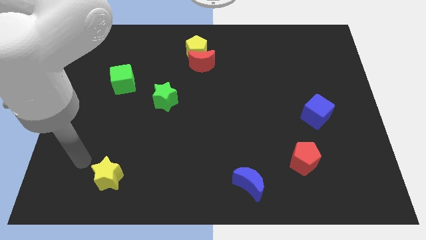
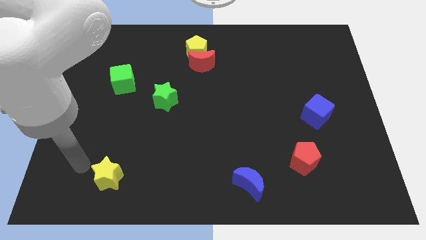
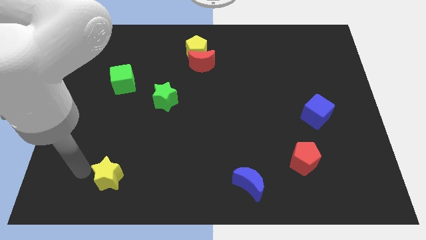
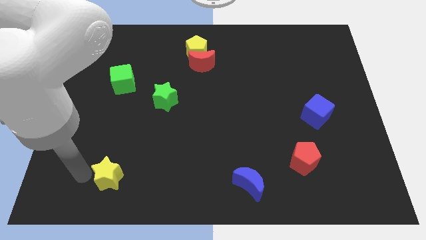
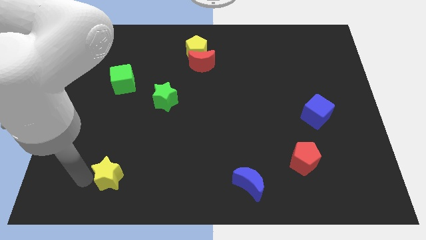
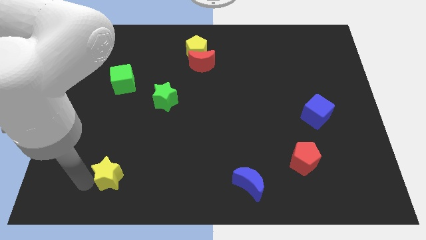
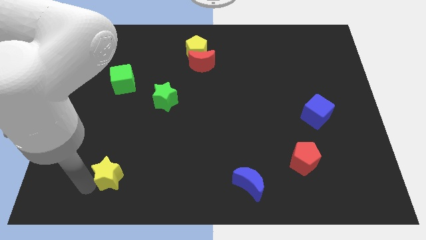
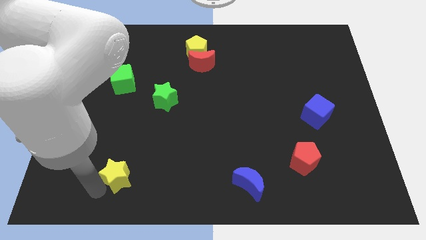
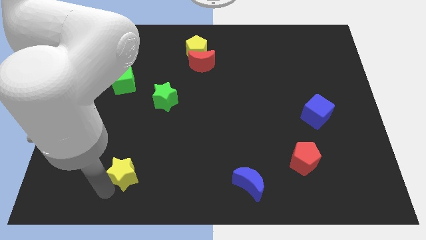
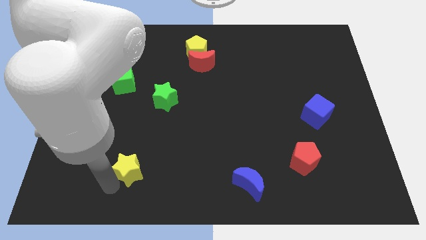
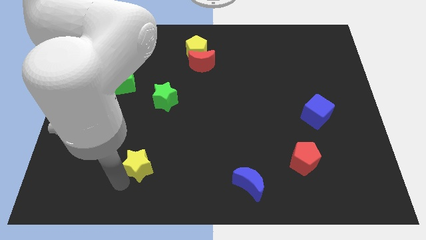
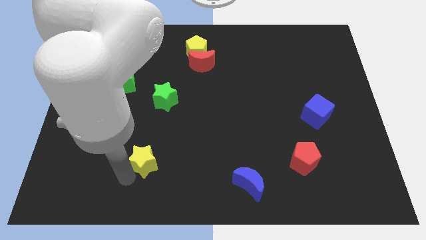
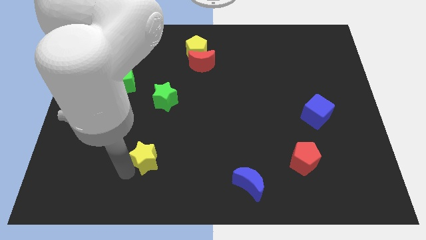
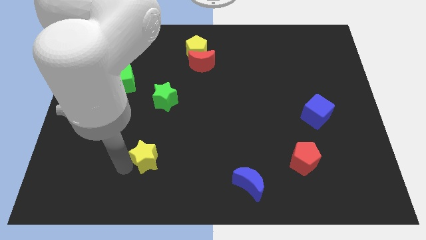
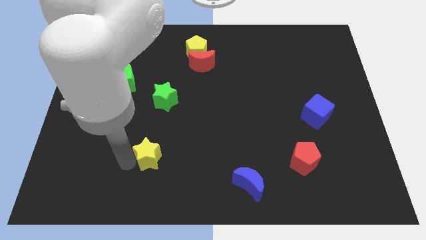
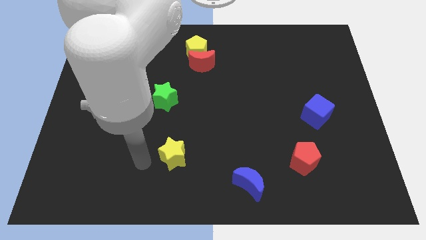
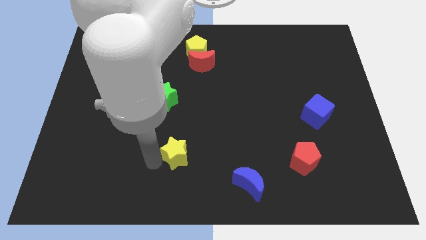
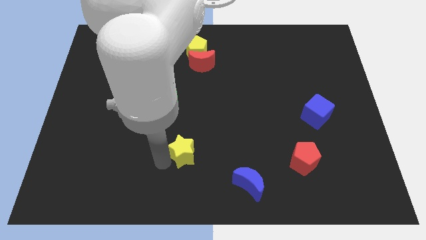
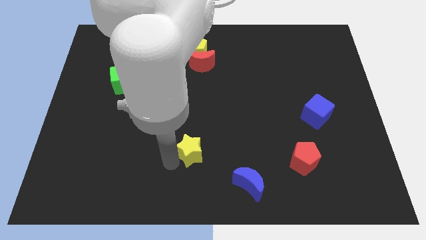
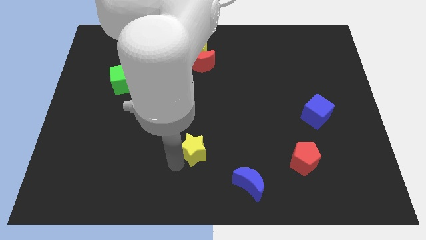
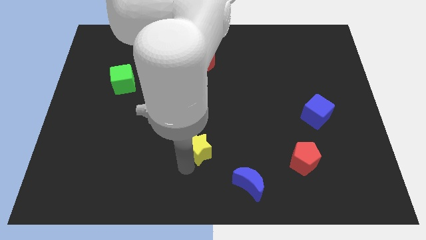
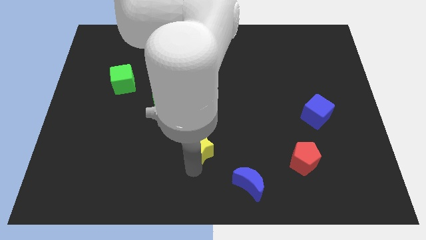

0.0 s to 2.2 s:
move the yellow star diagonally to the blue crescent

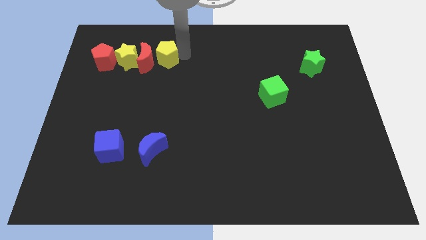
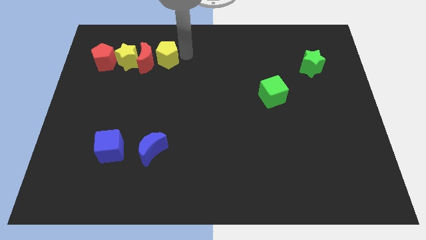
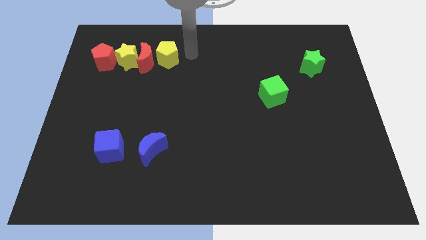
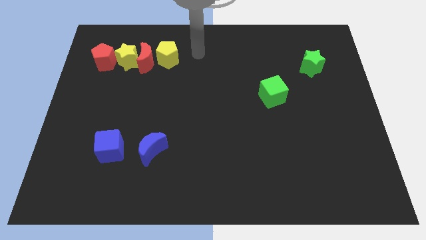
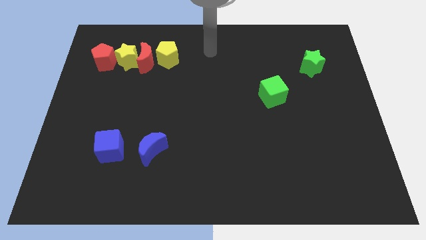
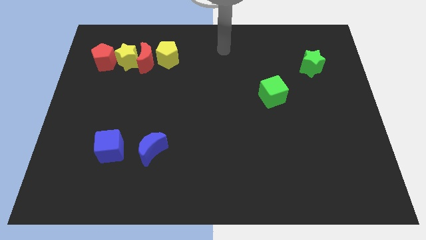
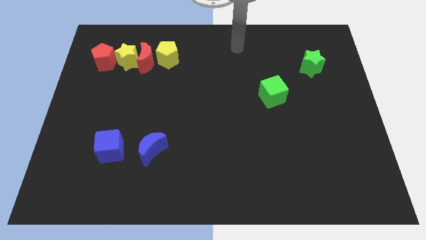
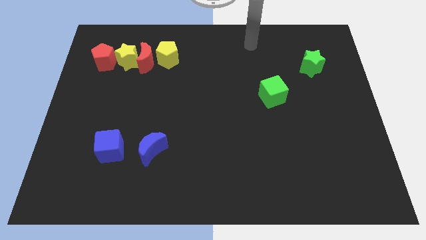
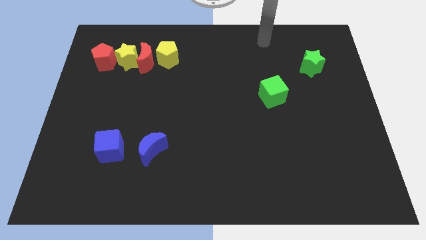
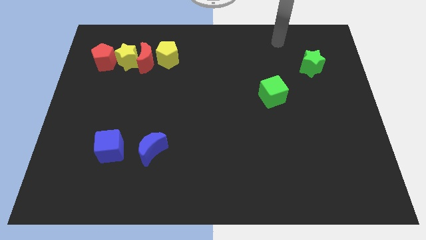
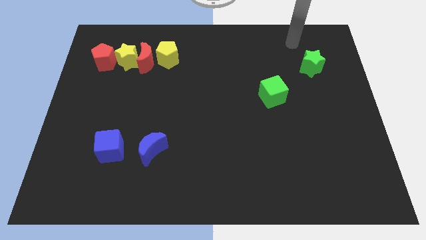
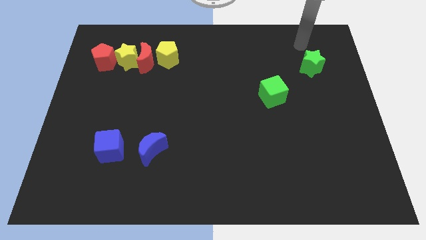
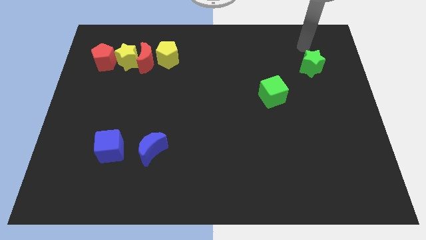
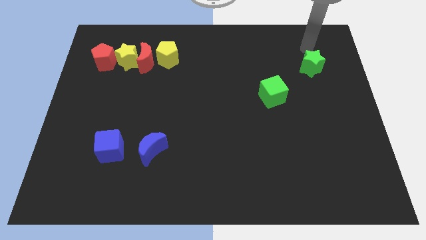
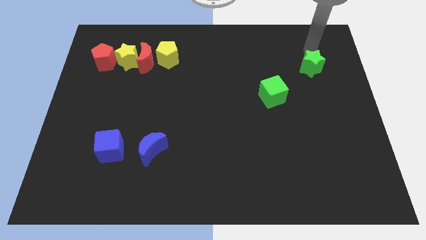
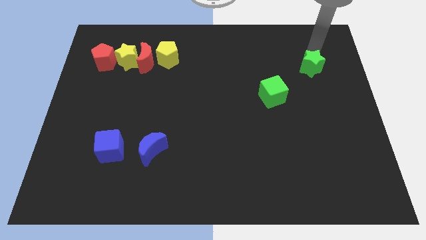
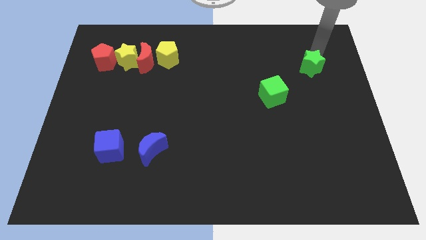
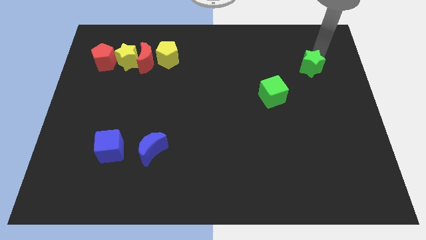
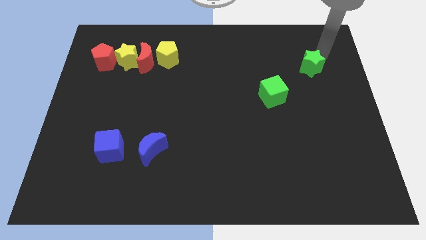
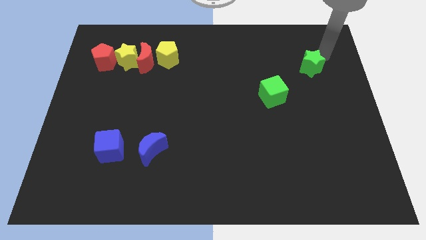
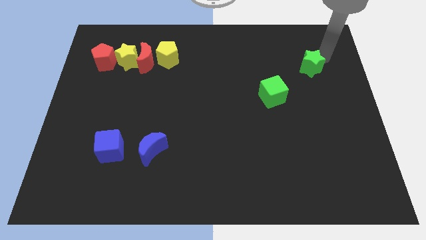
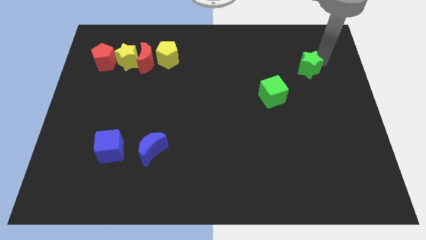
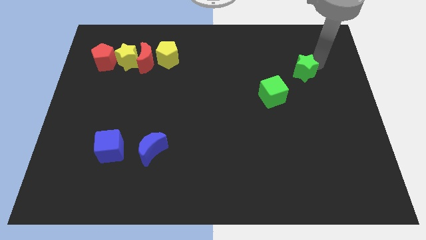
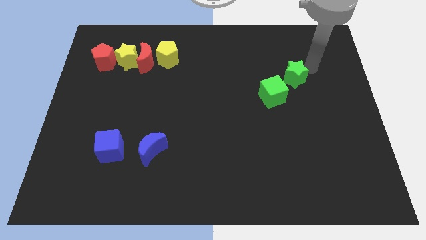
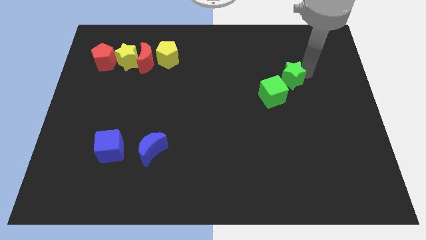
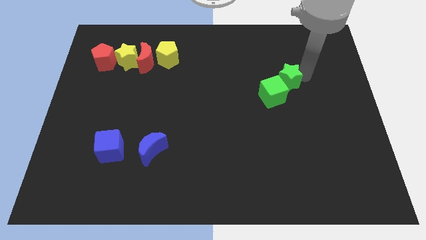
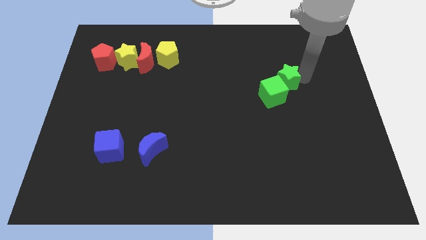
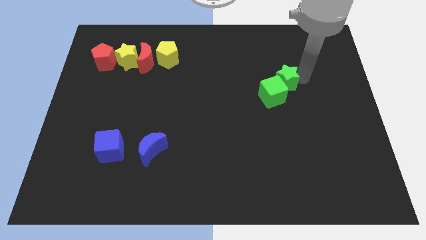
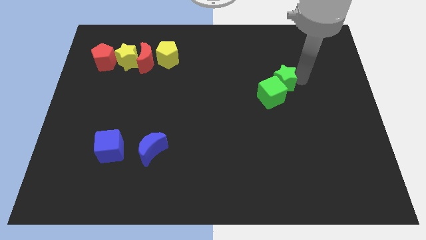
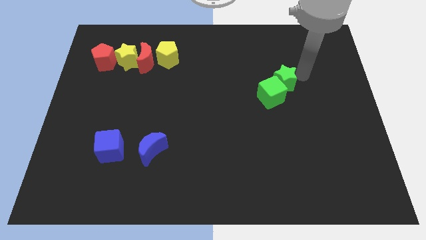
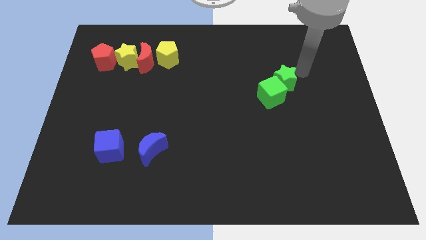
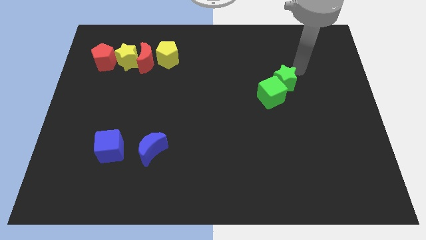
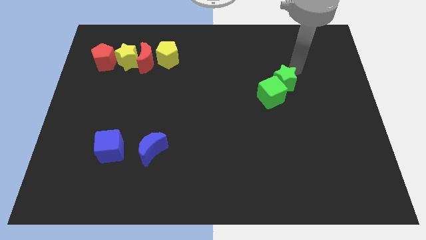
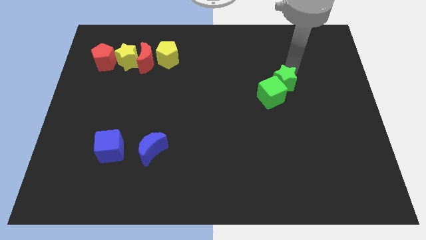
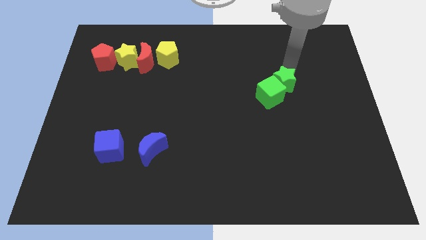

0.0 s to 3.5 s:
attach the green star to the green cube

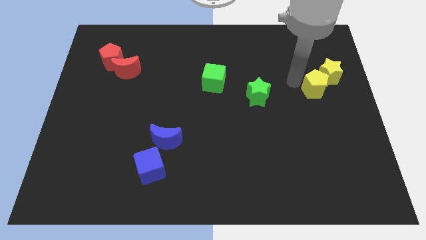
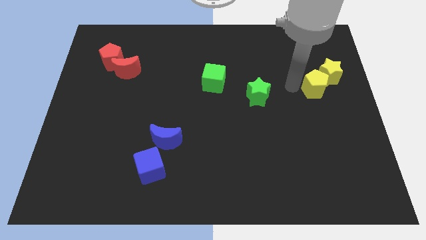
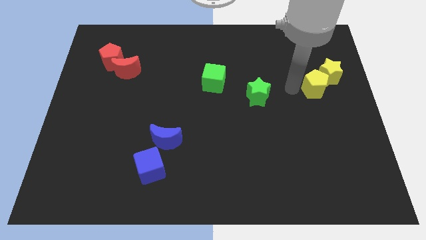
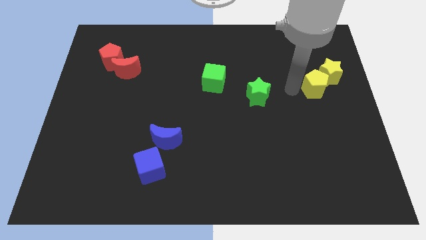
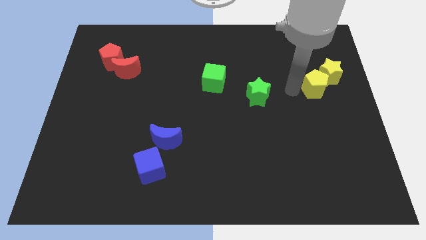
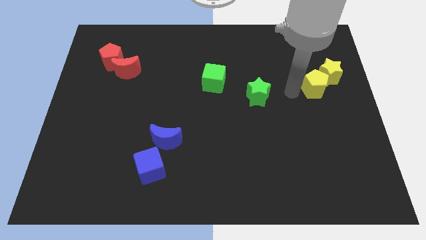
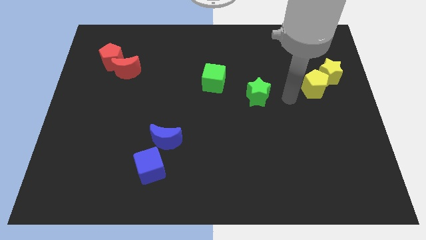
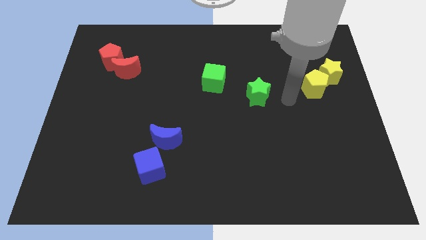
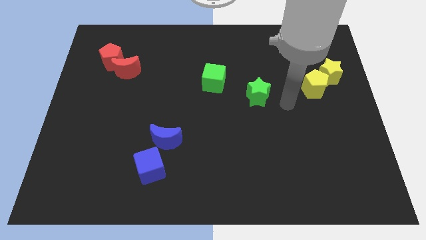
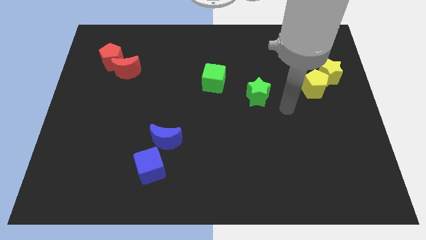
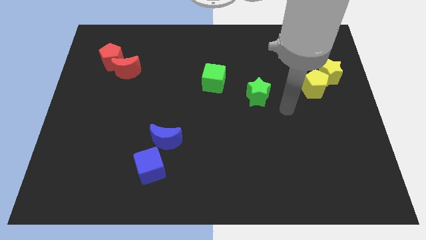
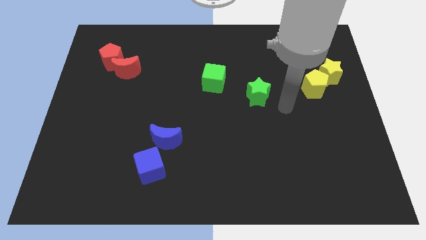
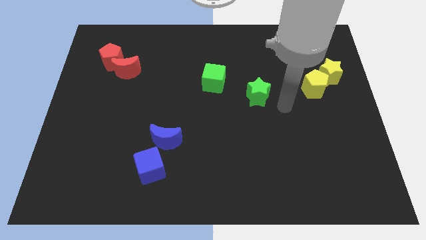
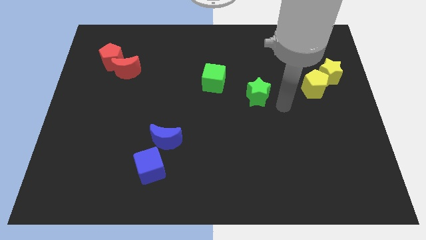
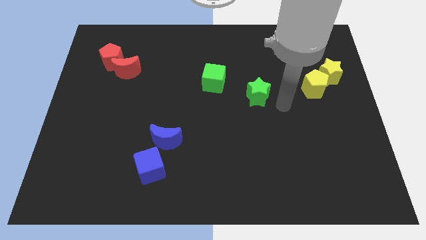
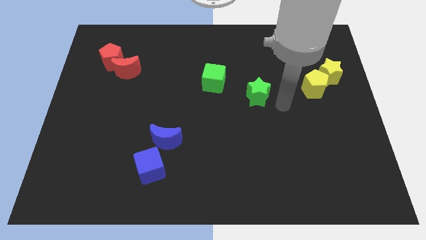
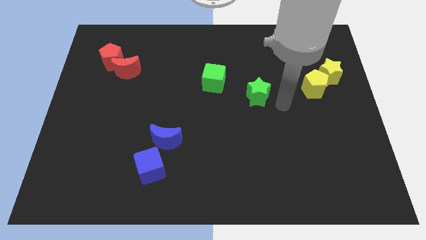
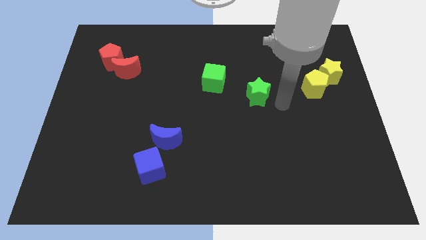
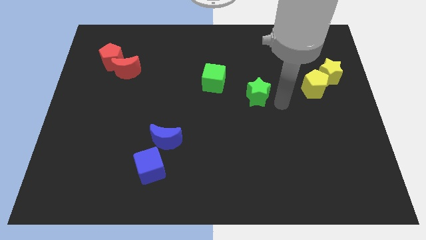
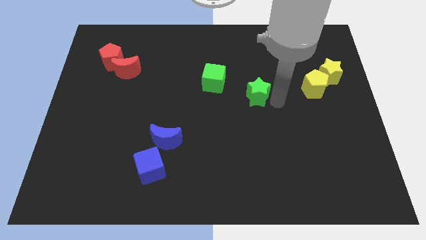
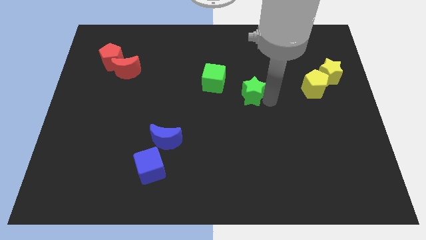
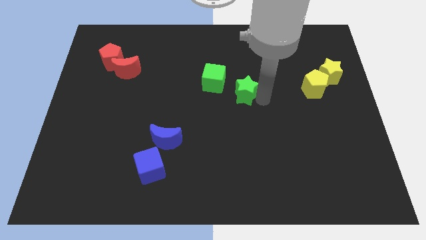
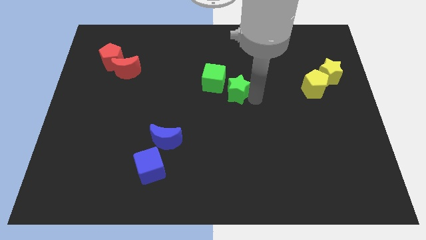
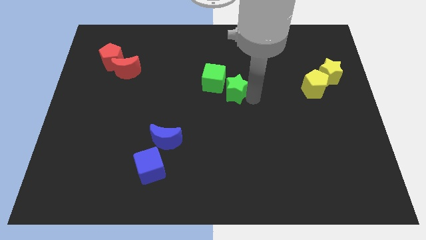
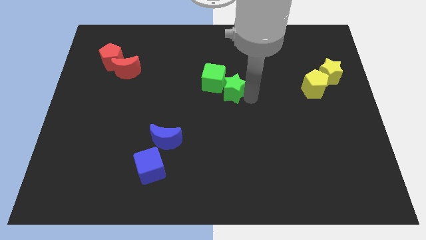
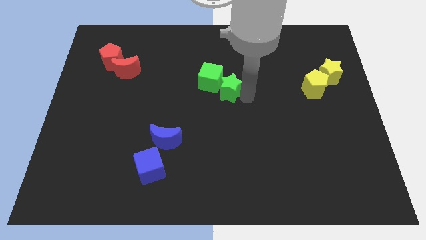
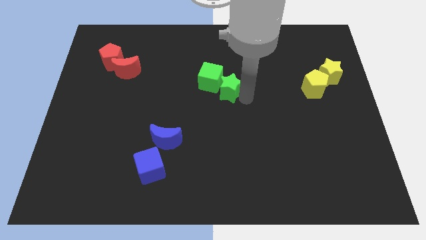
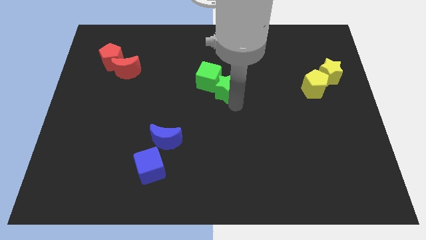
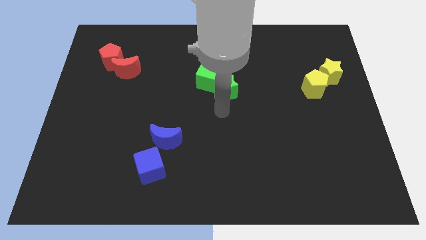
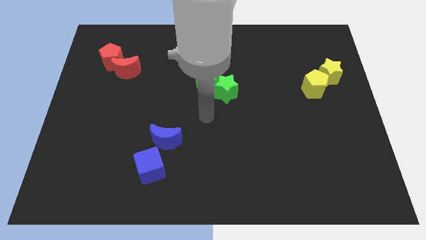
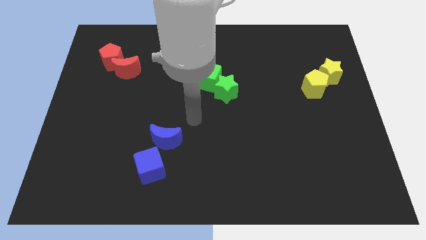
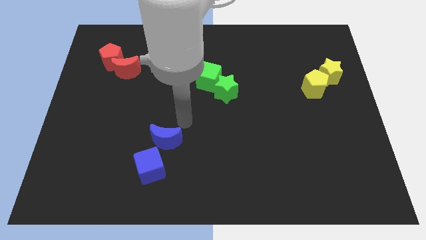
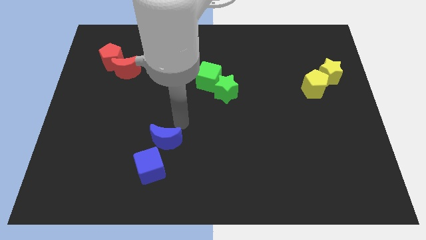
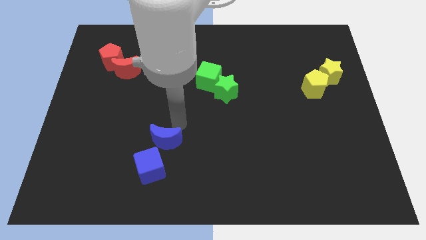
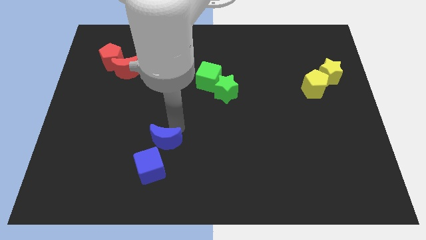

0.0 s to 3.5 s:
move the green star into the green cube
